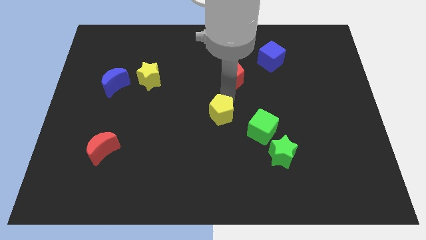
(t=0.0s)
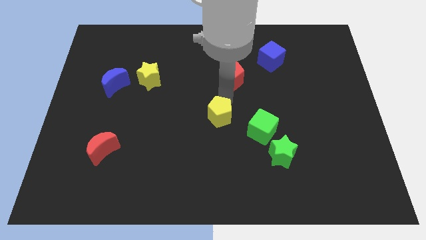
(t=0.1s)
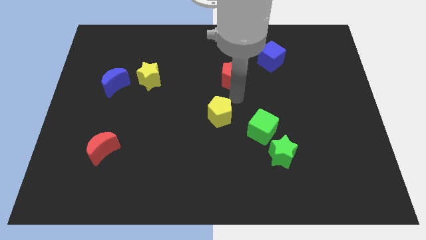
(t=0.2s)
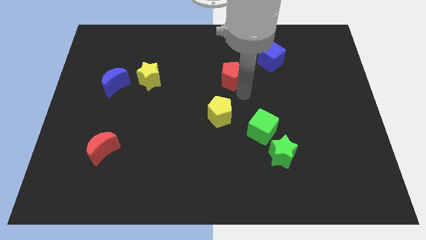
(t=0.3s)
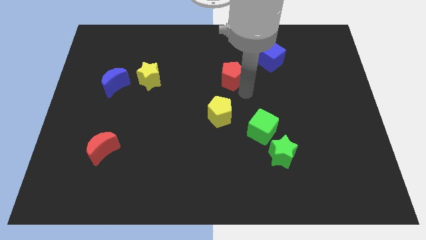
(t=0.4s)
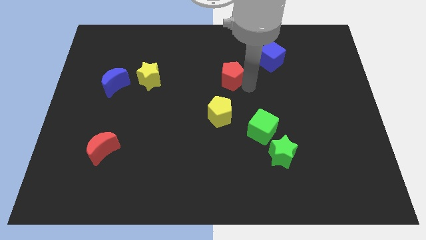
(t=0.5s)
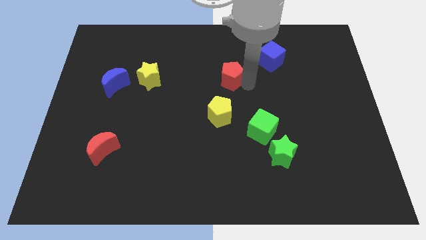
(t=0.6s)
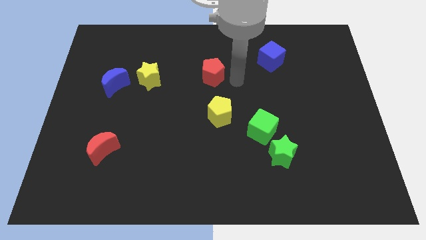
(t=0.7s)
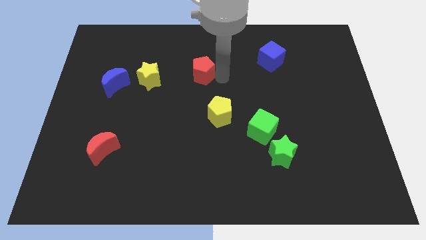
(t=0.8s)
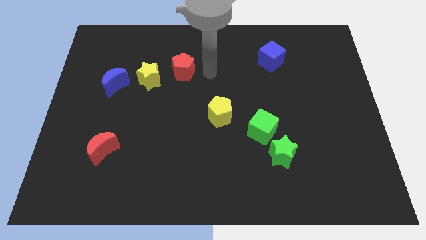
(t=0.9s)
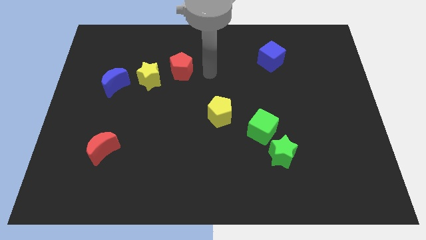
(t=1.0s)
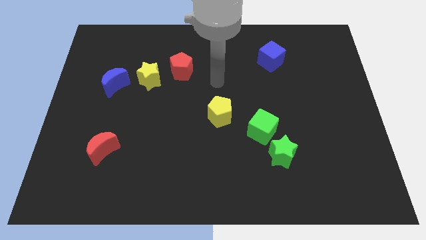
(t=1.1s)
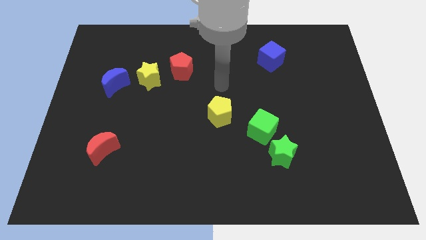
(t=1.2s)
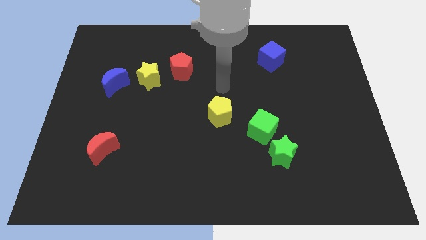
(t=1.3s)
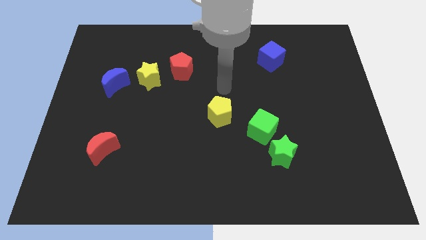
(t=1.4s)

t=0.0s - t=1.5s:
place the red pentagon beside the yellow star

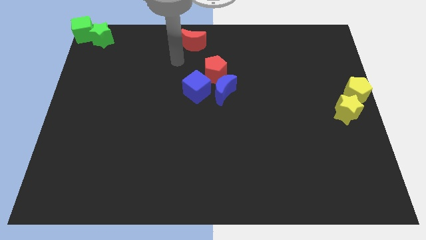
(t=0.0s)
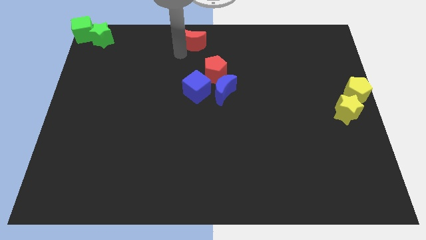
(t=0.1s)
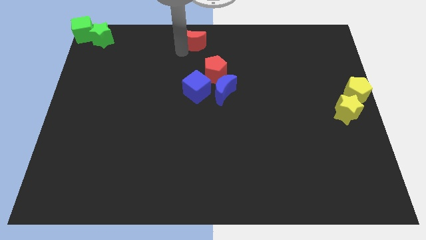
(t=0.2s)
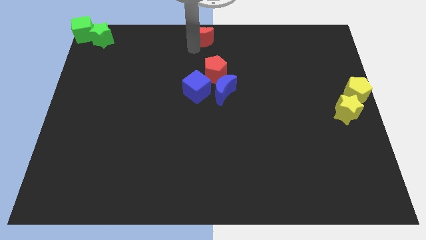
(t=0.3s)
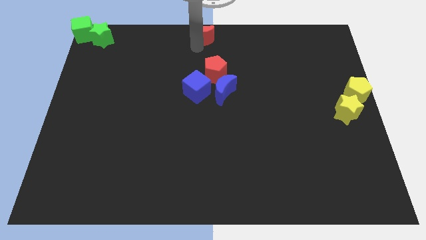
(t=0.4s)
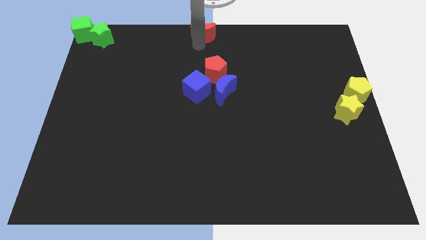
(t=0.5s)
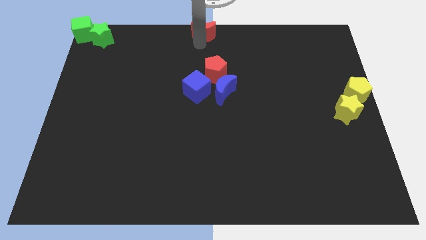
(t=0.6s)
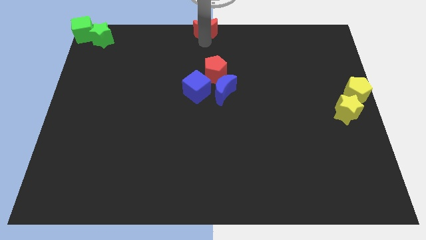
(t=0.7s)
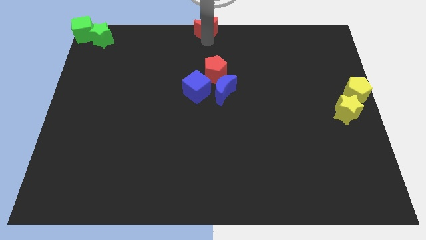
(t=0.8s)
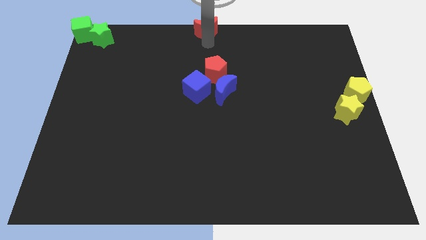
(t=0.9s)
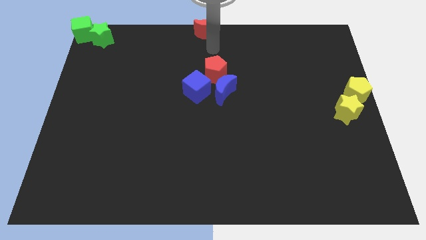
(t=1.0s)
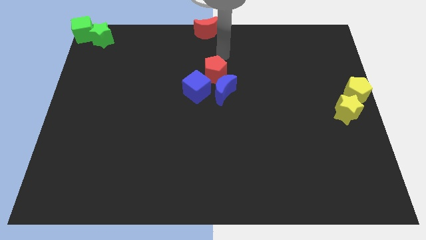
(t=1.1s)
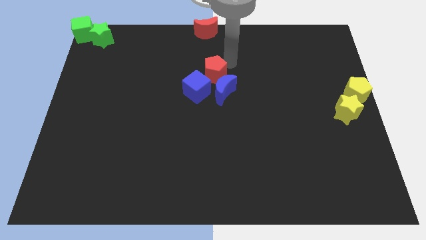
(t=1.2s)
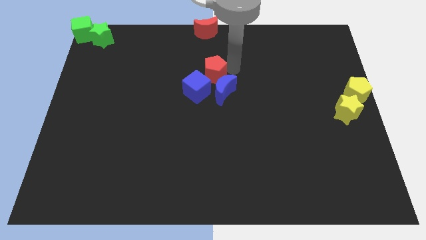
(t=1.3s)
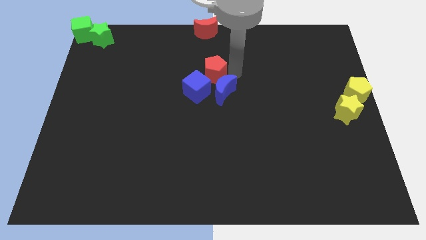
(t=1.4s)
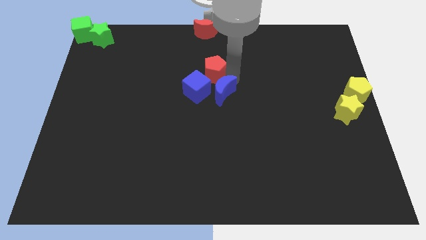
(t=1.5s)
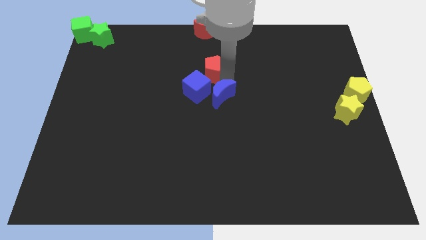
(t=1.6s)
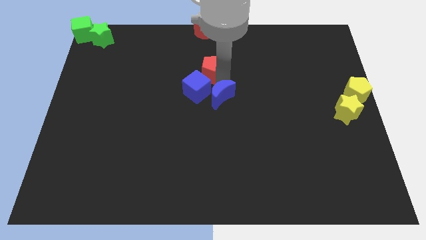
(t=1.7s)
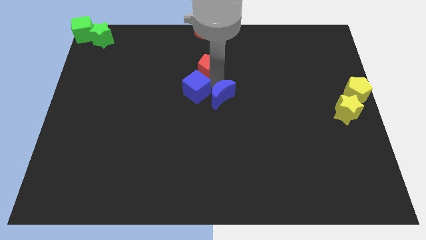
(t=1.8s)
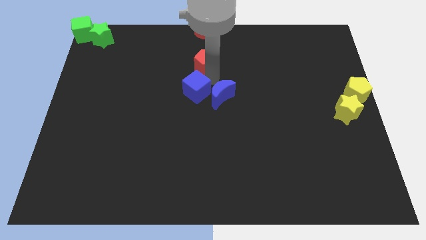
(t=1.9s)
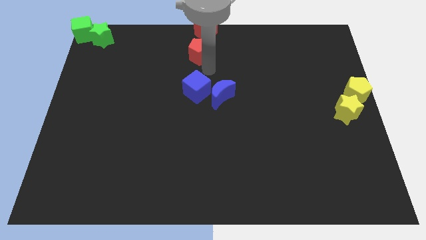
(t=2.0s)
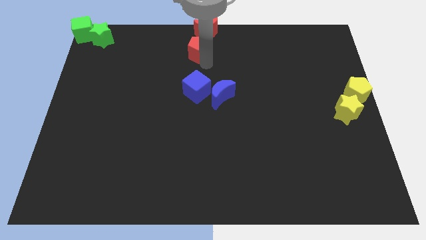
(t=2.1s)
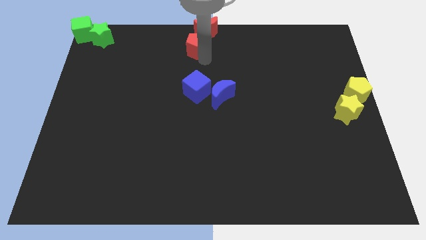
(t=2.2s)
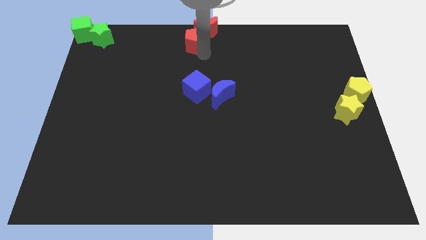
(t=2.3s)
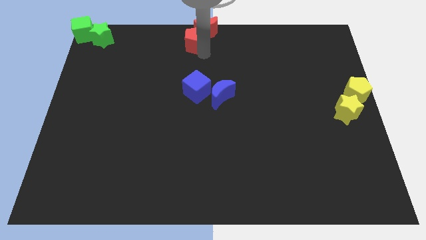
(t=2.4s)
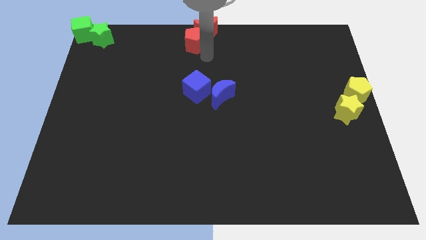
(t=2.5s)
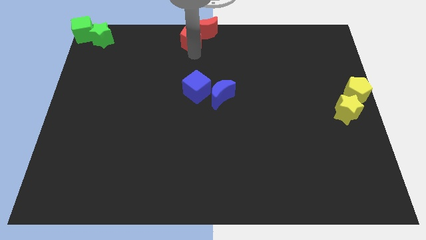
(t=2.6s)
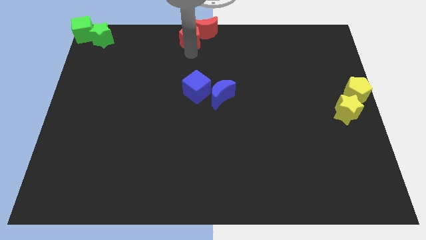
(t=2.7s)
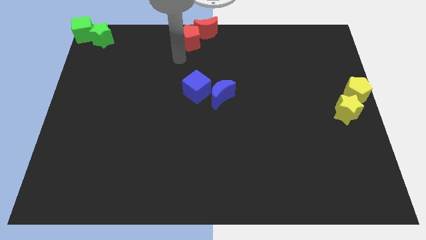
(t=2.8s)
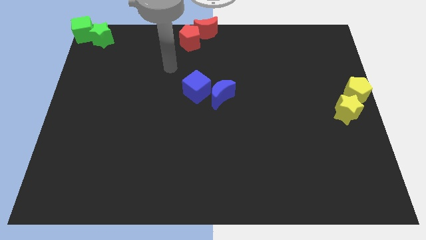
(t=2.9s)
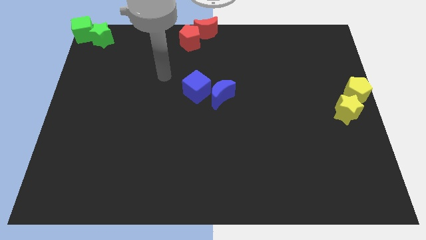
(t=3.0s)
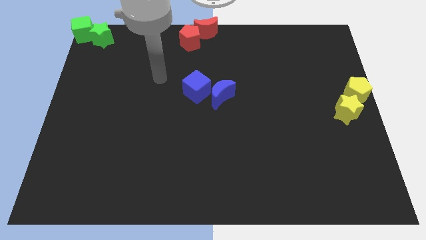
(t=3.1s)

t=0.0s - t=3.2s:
place the red pentagon towards the top center of the board

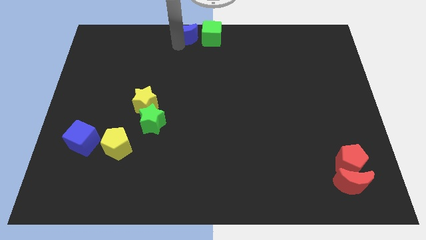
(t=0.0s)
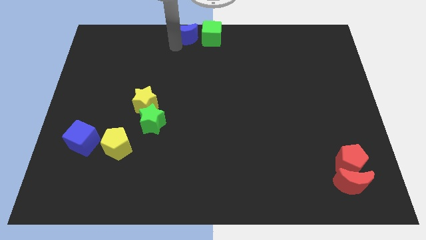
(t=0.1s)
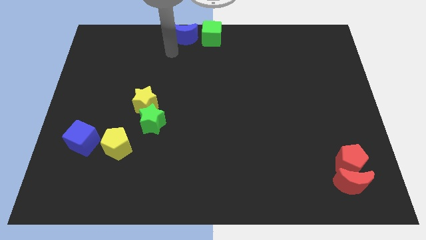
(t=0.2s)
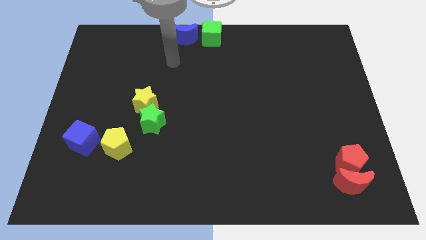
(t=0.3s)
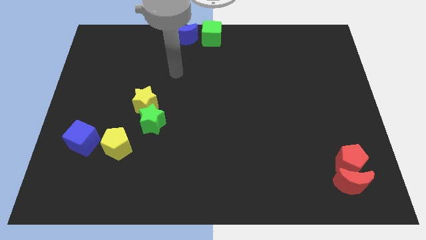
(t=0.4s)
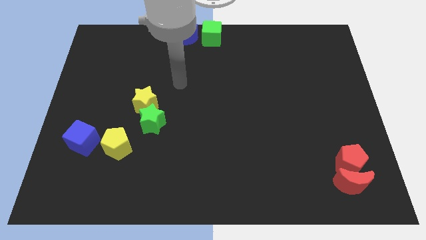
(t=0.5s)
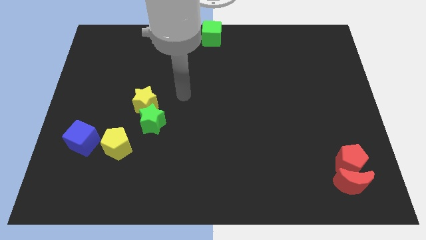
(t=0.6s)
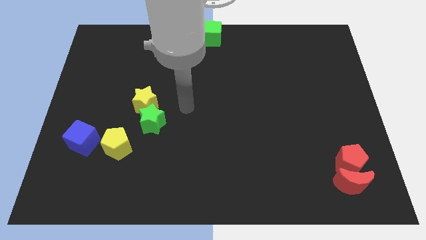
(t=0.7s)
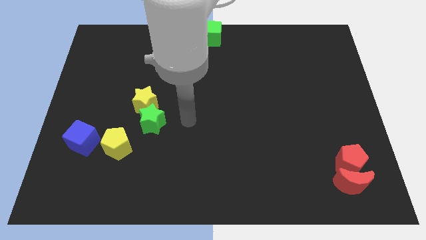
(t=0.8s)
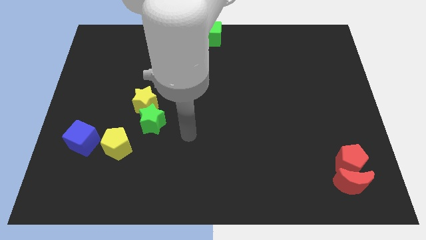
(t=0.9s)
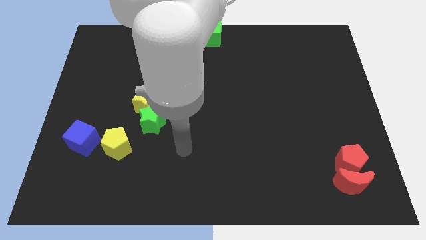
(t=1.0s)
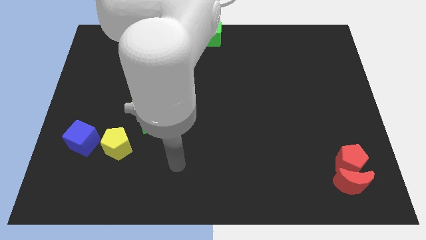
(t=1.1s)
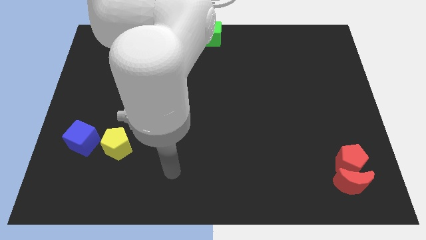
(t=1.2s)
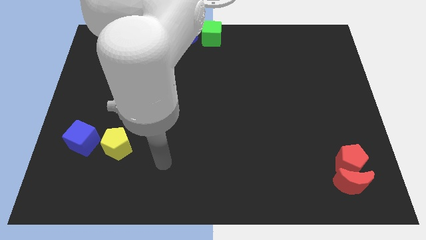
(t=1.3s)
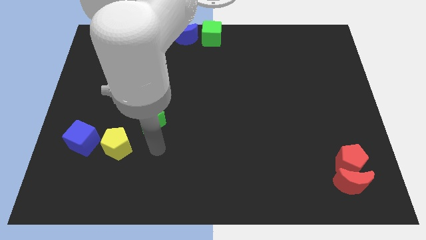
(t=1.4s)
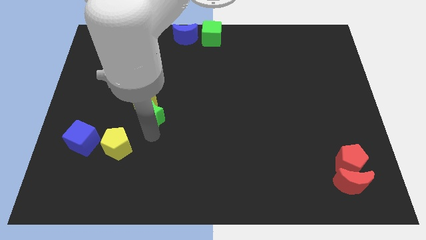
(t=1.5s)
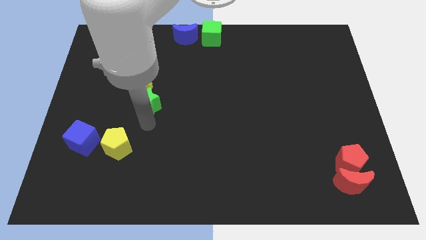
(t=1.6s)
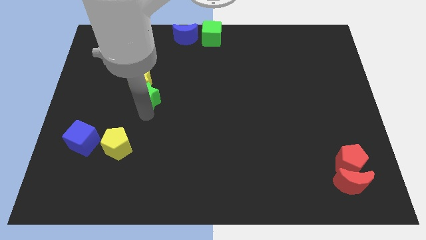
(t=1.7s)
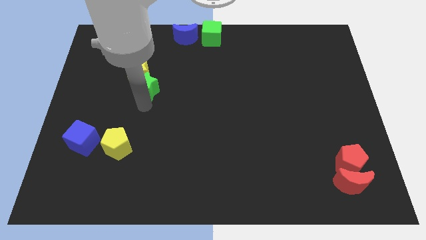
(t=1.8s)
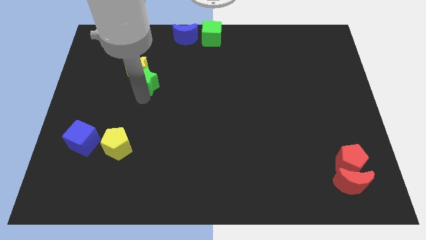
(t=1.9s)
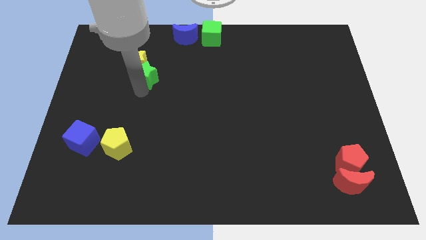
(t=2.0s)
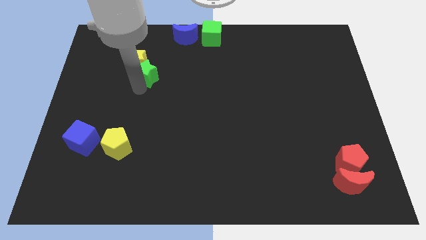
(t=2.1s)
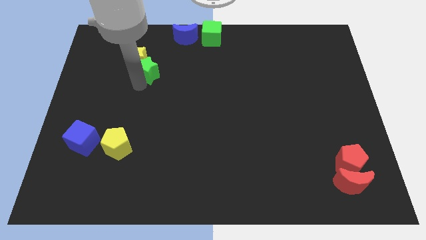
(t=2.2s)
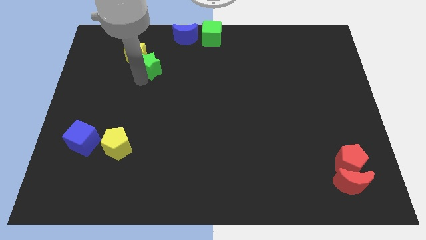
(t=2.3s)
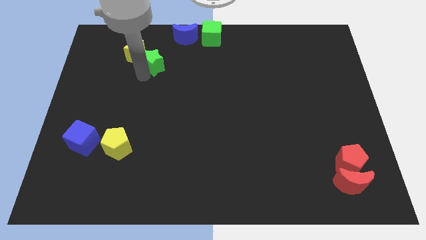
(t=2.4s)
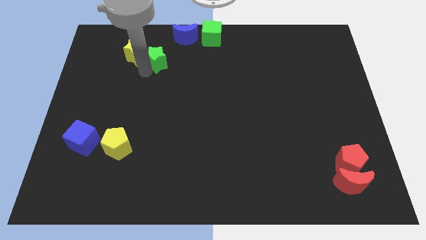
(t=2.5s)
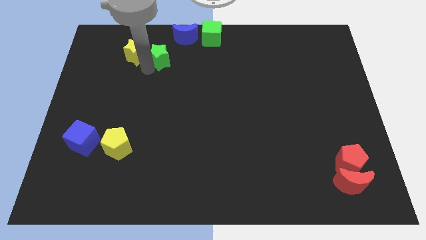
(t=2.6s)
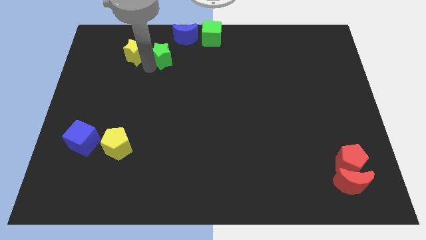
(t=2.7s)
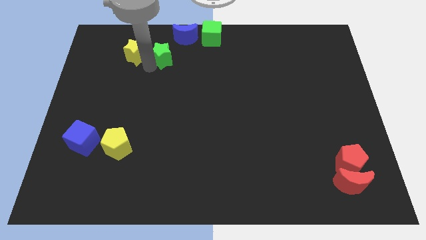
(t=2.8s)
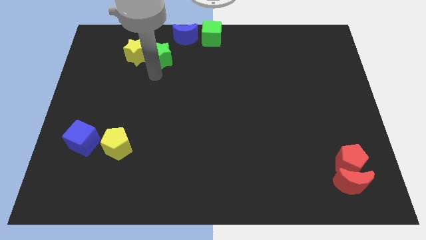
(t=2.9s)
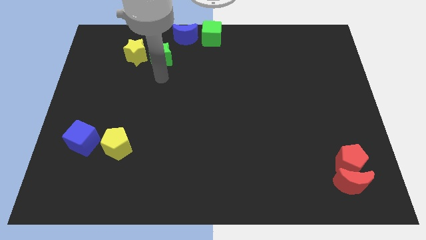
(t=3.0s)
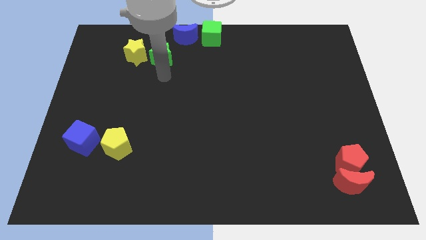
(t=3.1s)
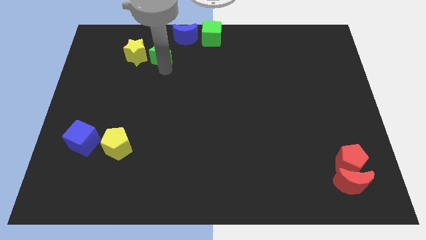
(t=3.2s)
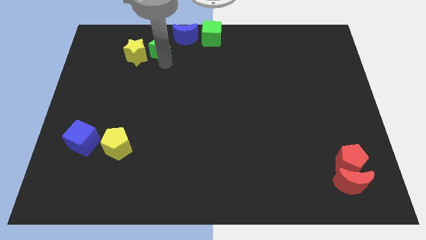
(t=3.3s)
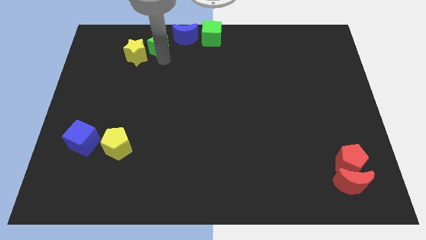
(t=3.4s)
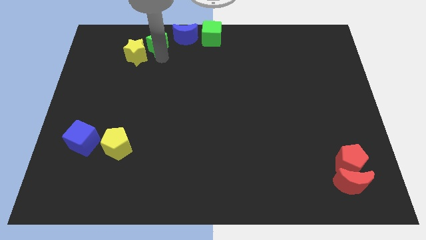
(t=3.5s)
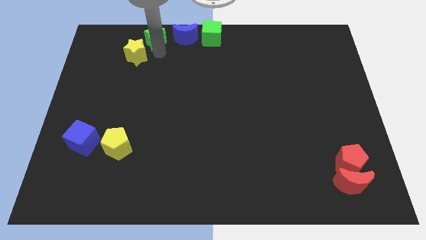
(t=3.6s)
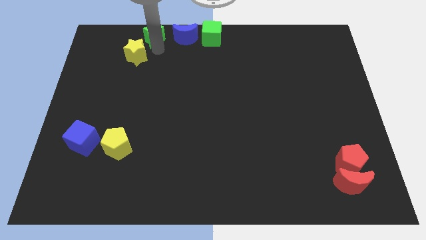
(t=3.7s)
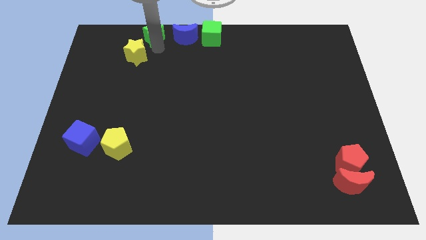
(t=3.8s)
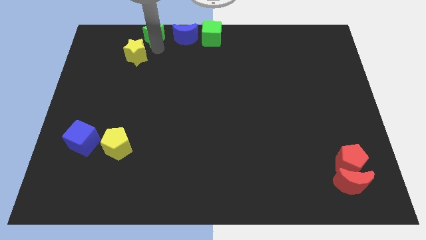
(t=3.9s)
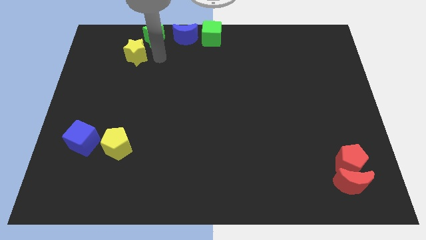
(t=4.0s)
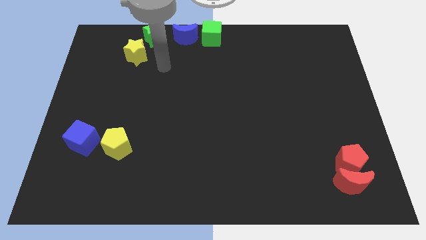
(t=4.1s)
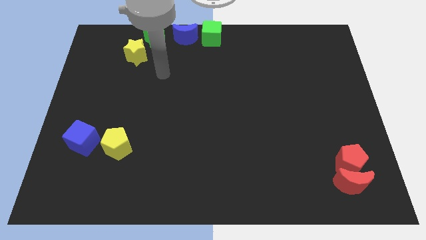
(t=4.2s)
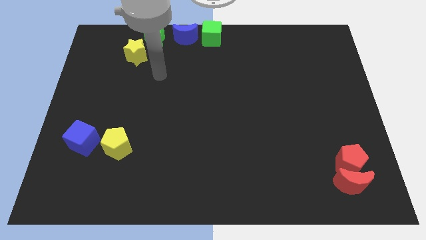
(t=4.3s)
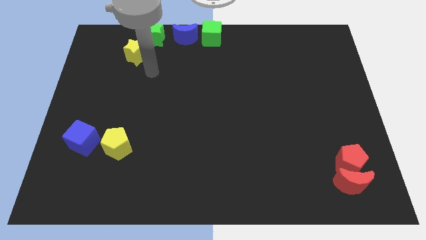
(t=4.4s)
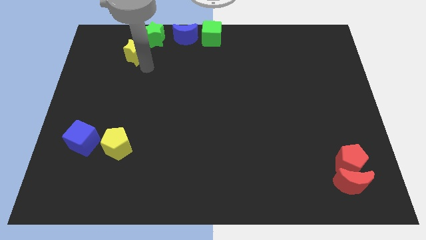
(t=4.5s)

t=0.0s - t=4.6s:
push the green star to the left of the blue crescent
